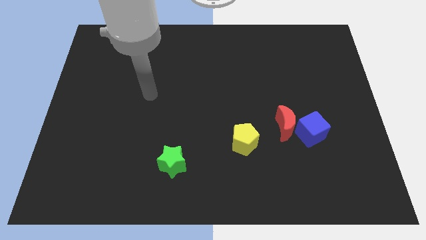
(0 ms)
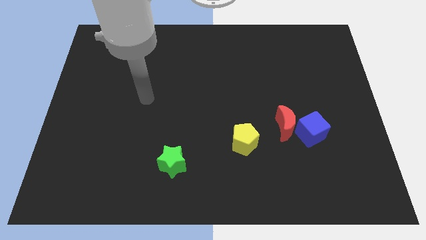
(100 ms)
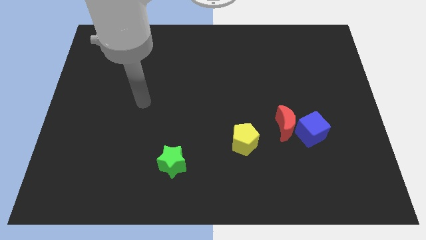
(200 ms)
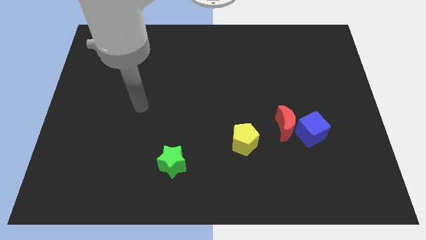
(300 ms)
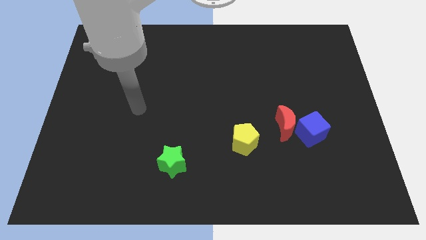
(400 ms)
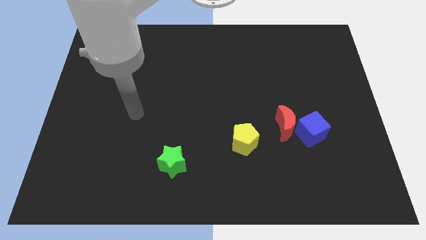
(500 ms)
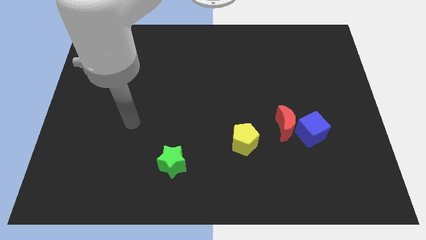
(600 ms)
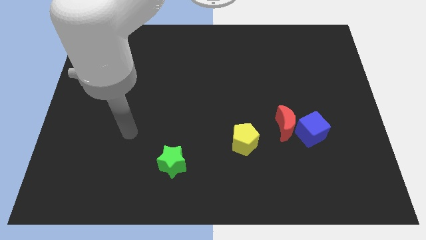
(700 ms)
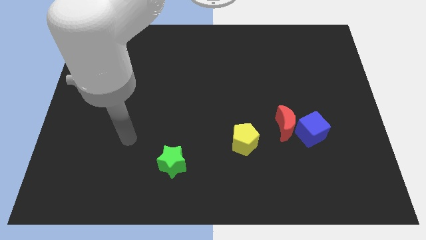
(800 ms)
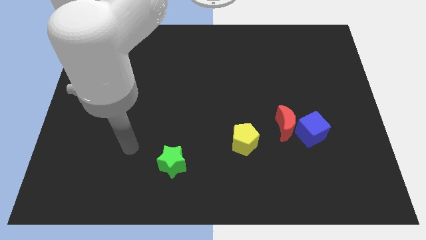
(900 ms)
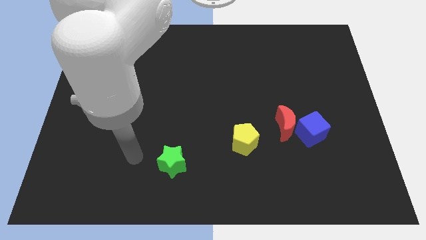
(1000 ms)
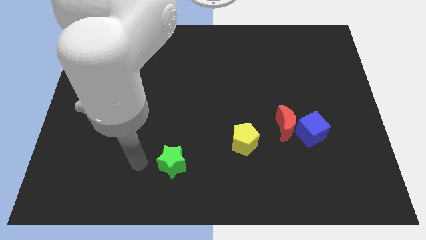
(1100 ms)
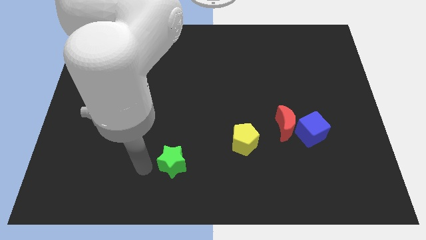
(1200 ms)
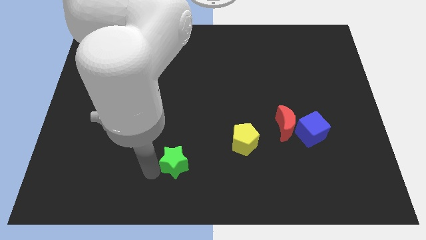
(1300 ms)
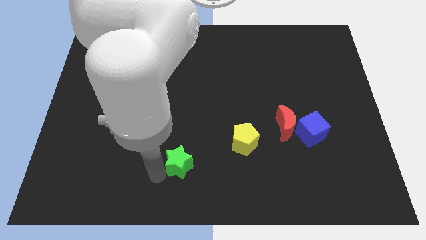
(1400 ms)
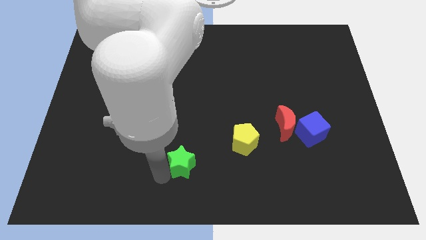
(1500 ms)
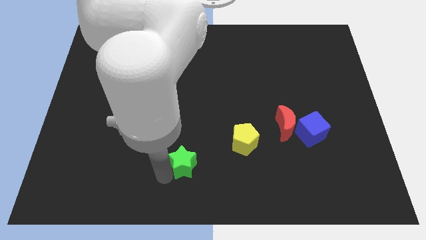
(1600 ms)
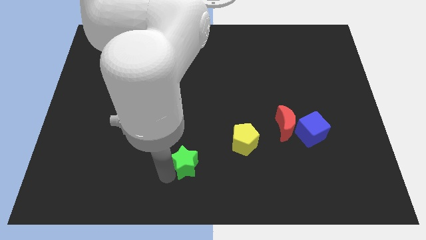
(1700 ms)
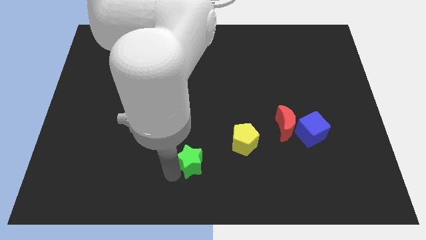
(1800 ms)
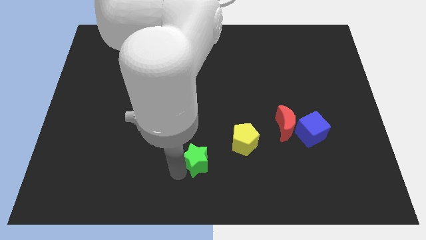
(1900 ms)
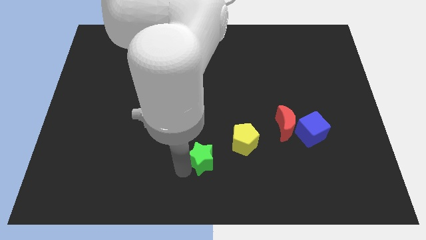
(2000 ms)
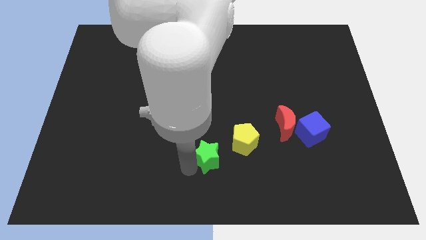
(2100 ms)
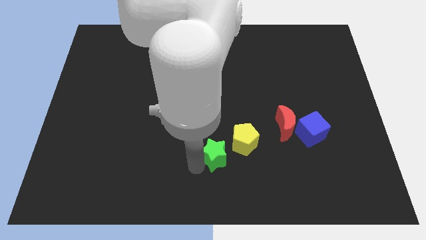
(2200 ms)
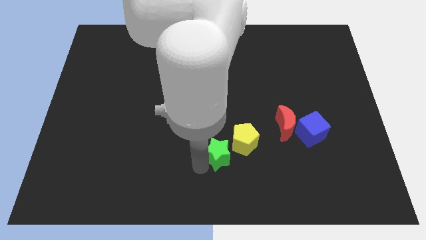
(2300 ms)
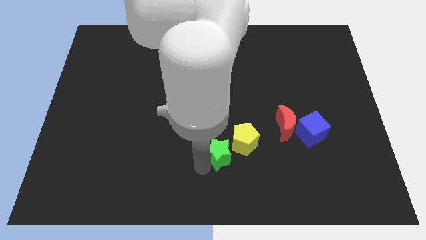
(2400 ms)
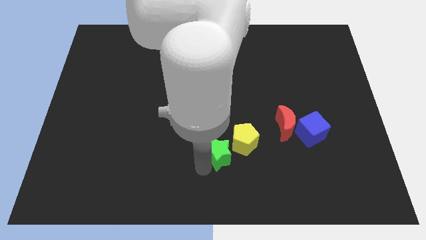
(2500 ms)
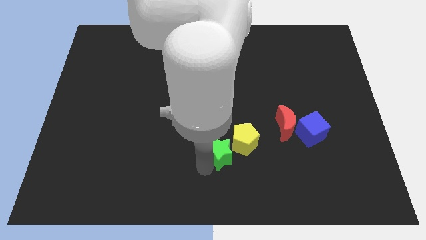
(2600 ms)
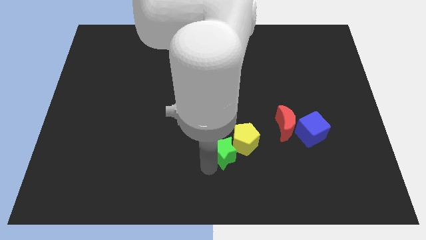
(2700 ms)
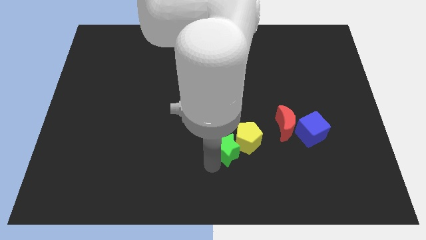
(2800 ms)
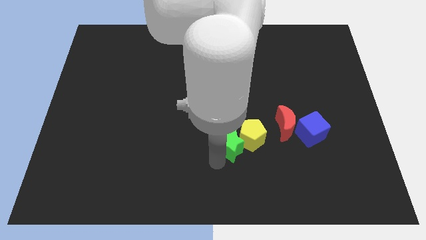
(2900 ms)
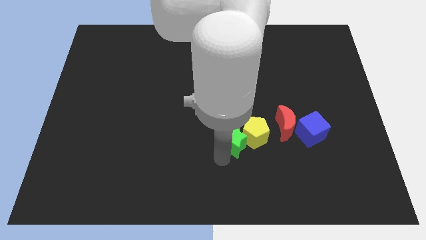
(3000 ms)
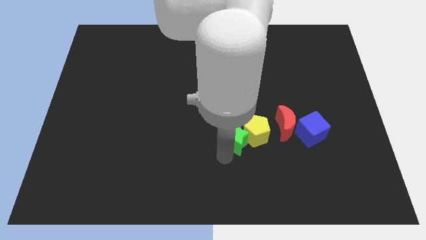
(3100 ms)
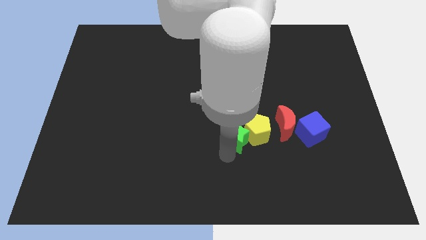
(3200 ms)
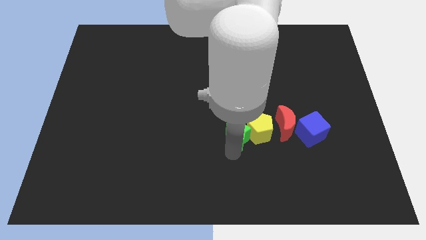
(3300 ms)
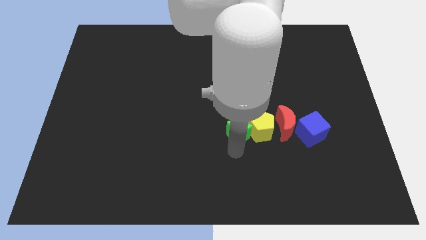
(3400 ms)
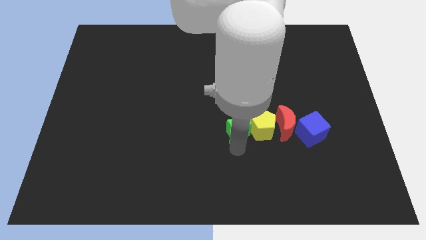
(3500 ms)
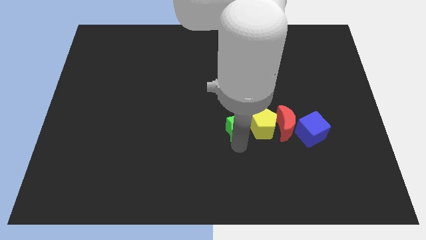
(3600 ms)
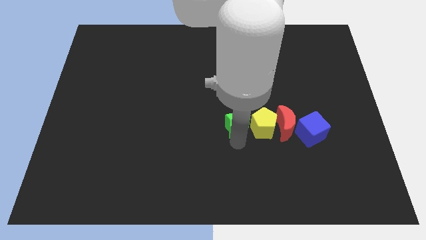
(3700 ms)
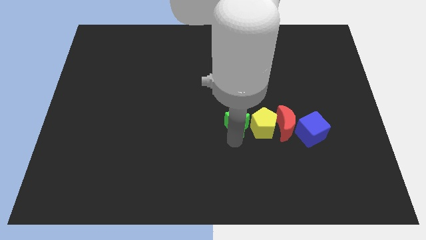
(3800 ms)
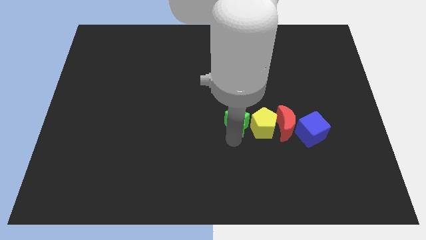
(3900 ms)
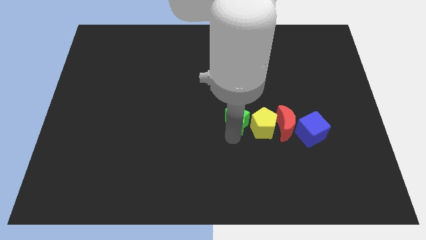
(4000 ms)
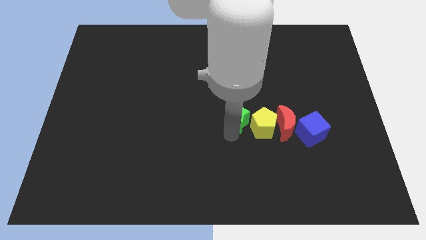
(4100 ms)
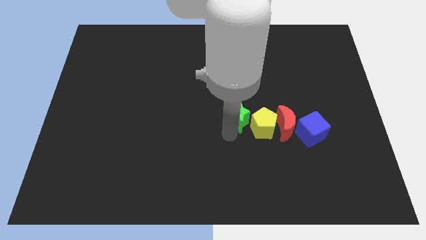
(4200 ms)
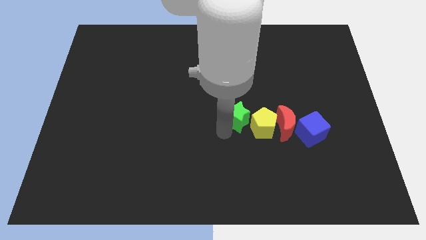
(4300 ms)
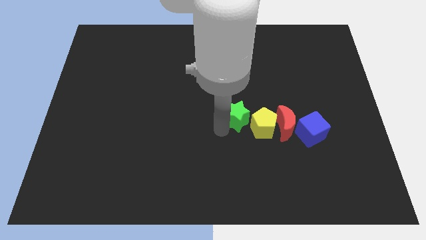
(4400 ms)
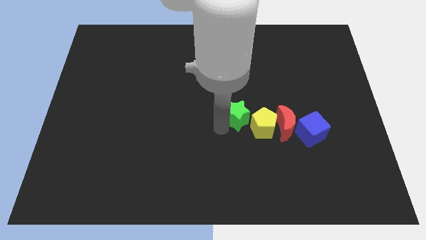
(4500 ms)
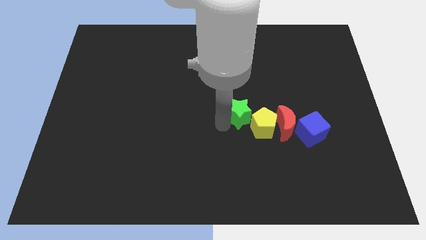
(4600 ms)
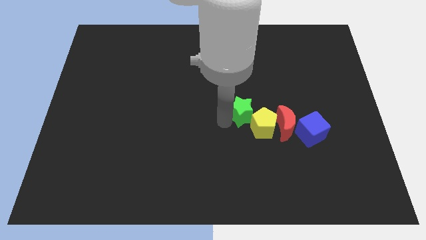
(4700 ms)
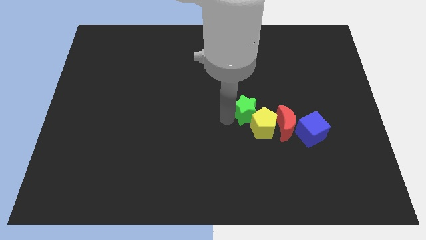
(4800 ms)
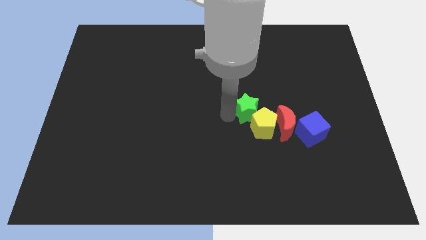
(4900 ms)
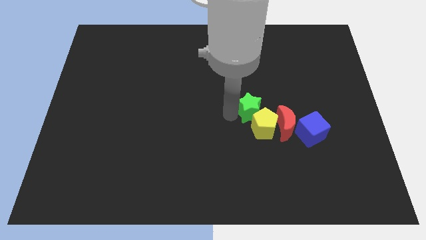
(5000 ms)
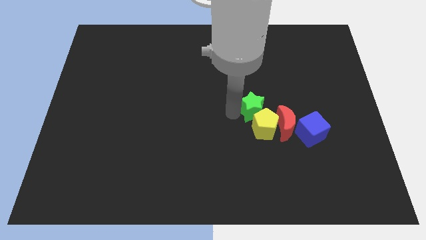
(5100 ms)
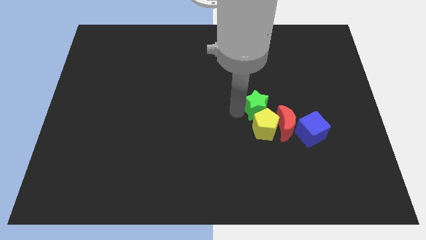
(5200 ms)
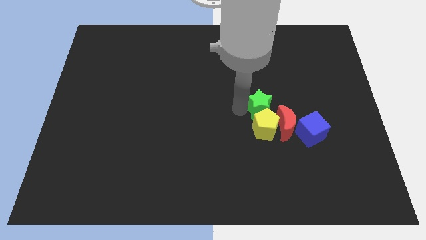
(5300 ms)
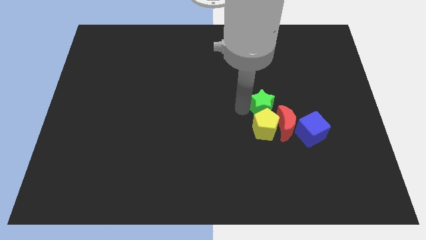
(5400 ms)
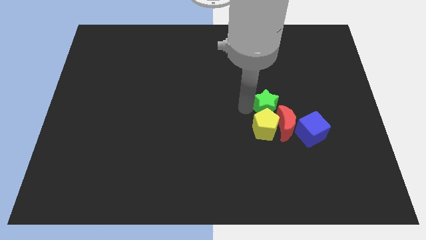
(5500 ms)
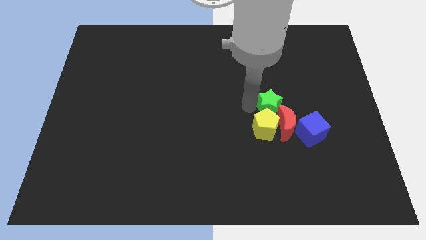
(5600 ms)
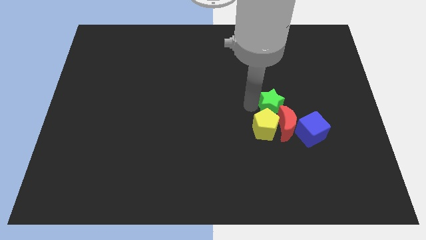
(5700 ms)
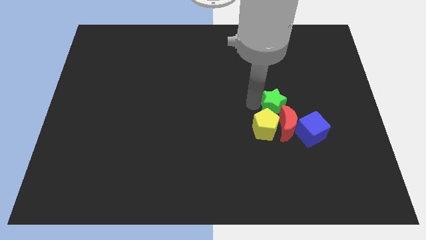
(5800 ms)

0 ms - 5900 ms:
slide the star towards the red moon

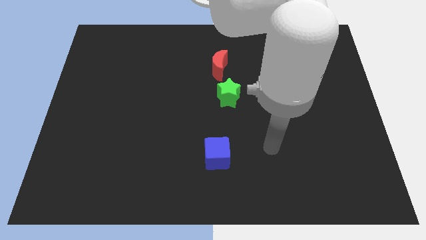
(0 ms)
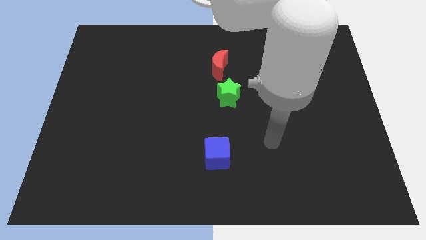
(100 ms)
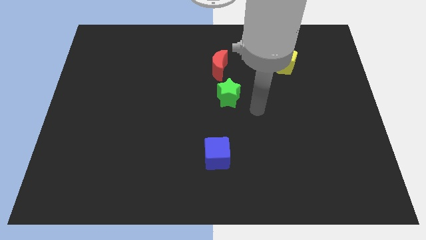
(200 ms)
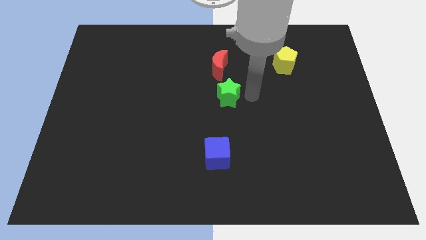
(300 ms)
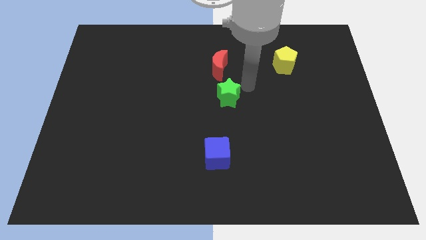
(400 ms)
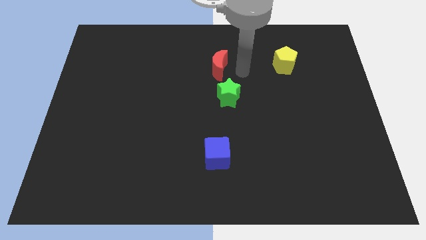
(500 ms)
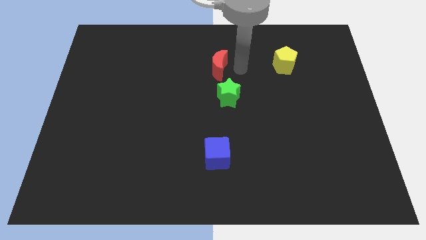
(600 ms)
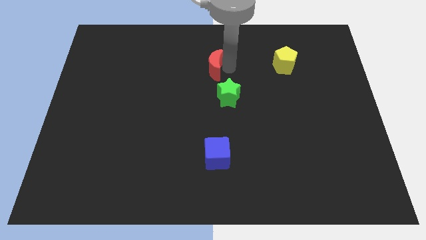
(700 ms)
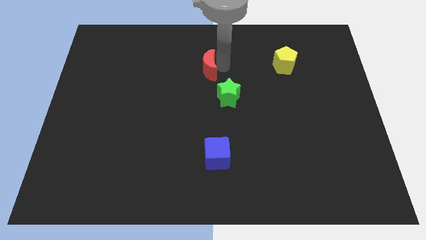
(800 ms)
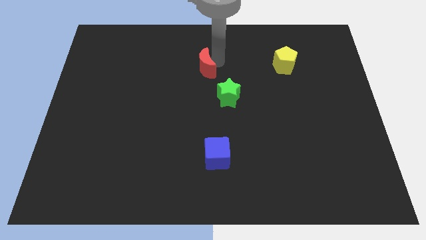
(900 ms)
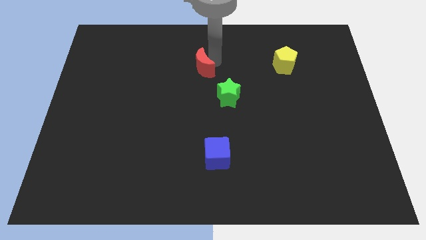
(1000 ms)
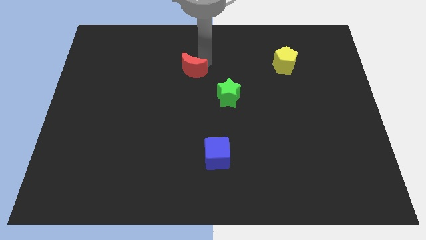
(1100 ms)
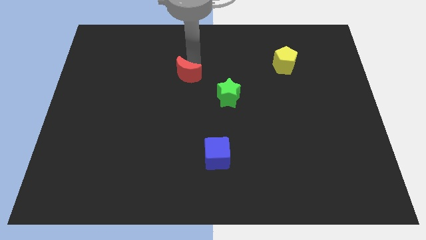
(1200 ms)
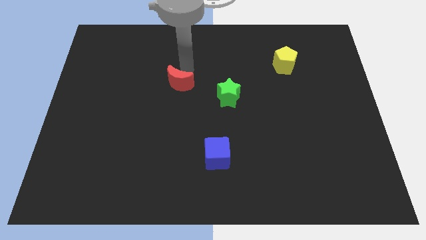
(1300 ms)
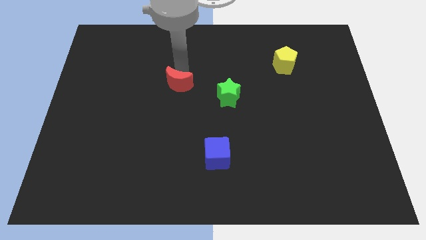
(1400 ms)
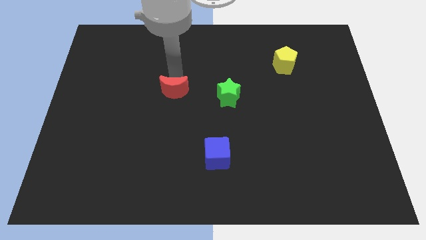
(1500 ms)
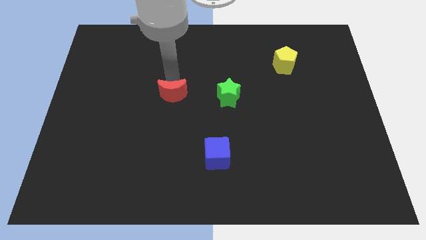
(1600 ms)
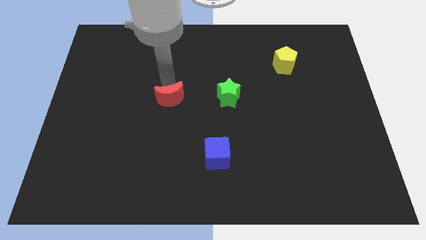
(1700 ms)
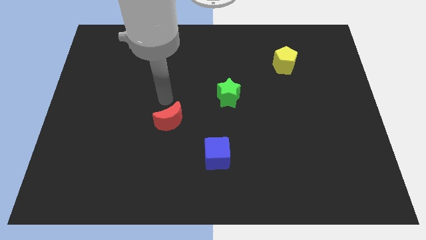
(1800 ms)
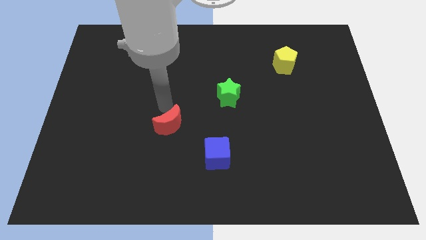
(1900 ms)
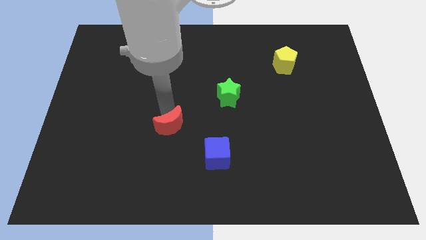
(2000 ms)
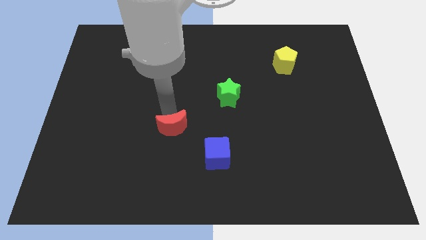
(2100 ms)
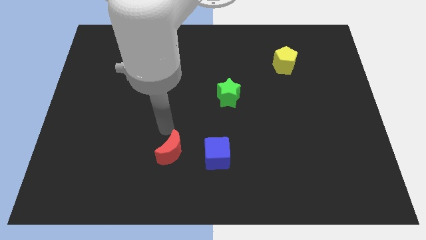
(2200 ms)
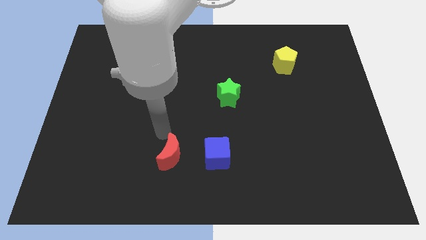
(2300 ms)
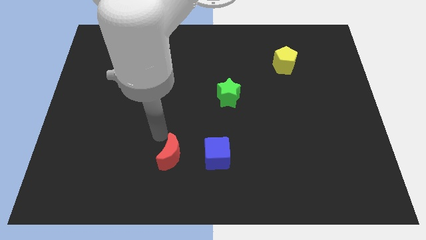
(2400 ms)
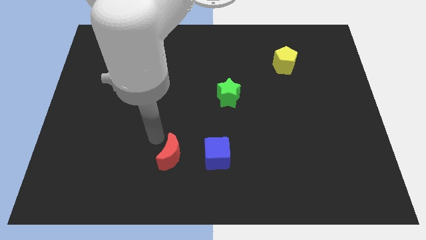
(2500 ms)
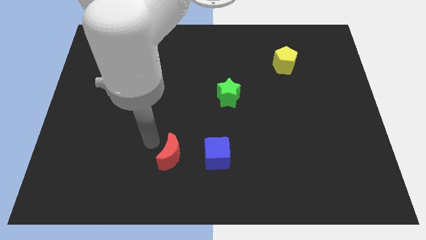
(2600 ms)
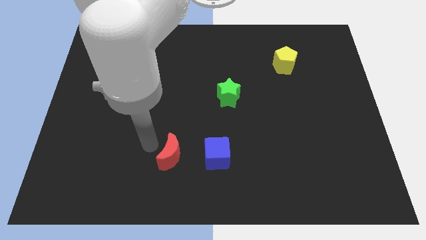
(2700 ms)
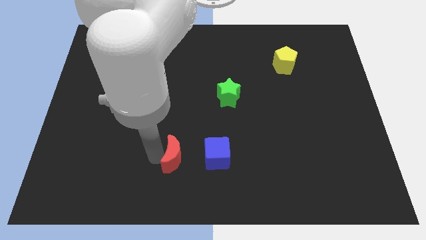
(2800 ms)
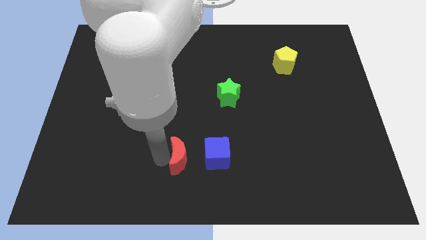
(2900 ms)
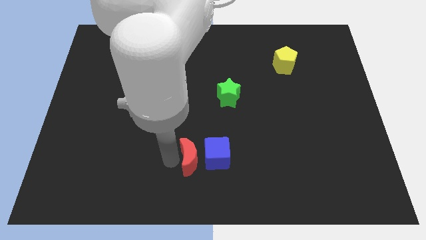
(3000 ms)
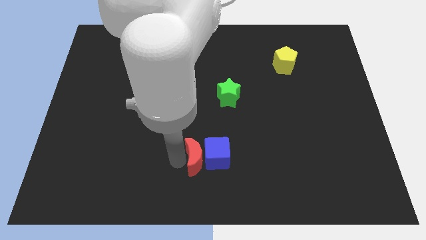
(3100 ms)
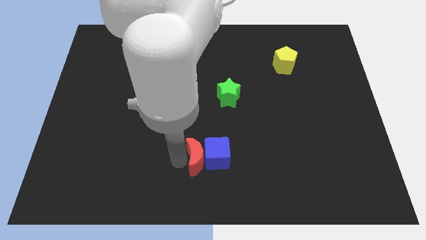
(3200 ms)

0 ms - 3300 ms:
put the red moon close to the cube
